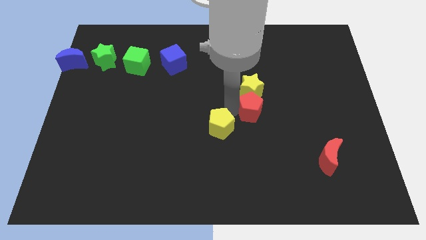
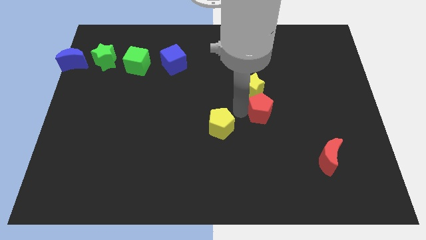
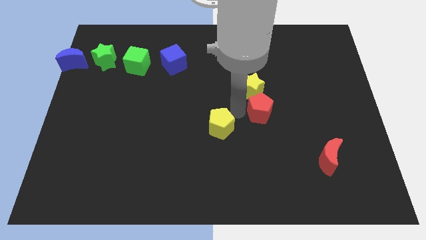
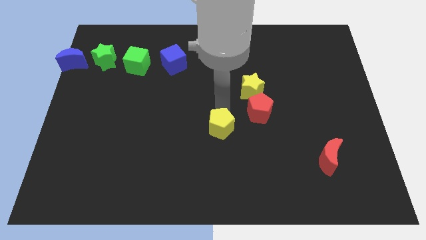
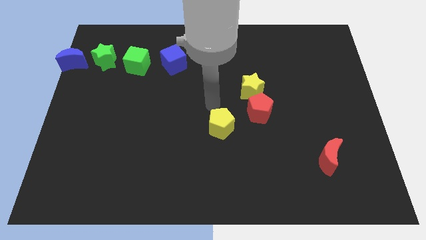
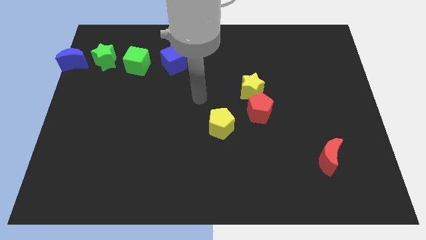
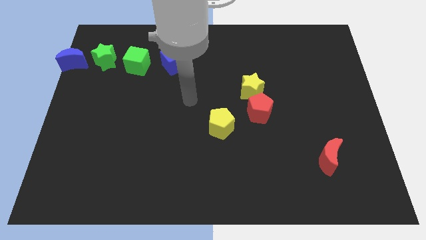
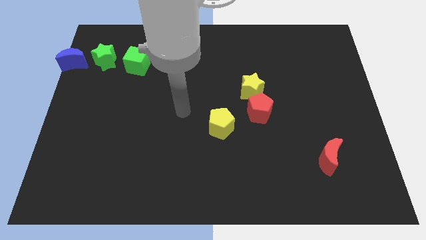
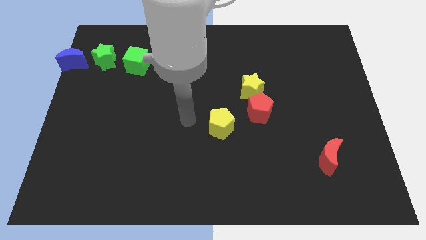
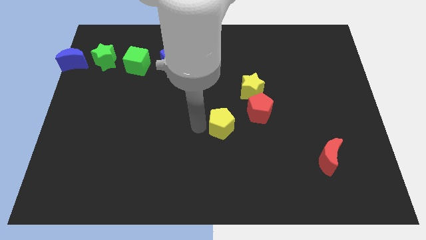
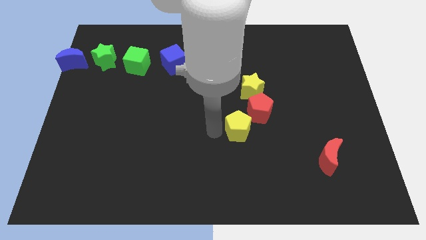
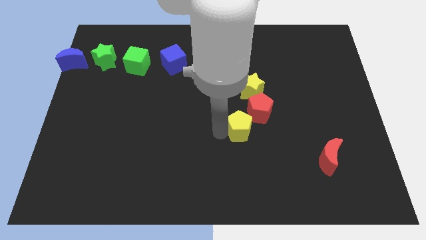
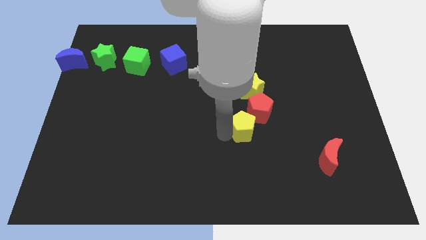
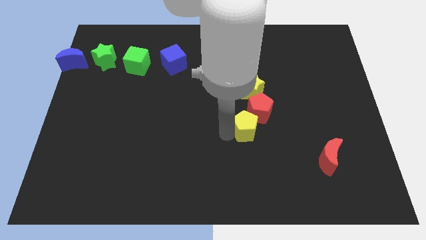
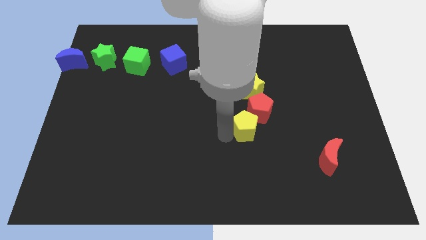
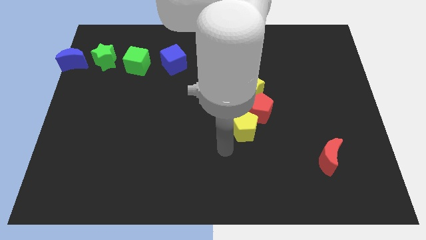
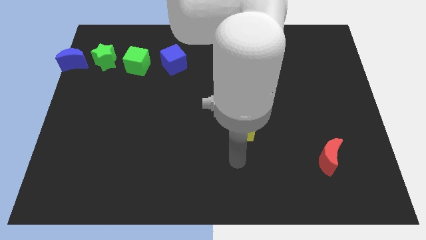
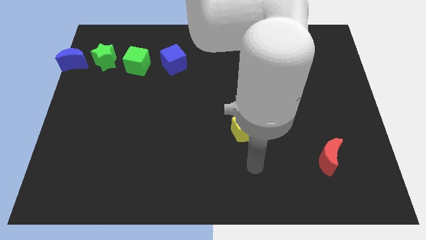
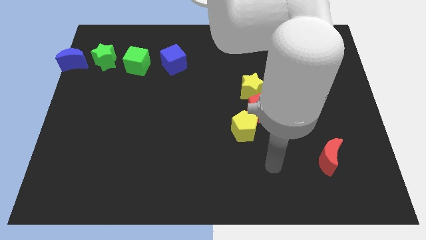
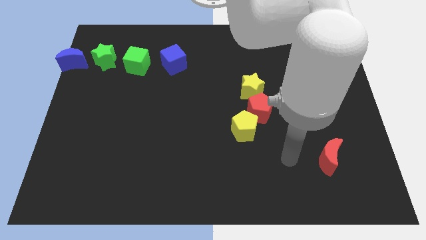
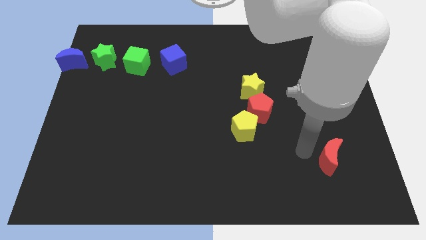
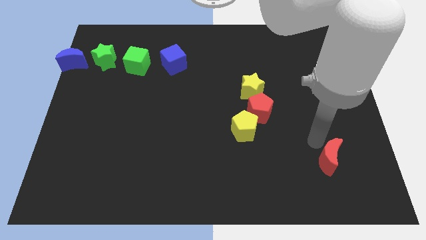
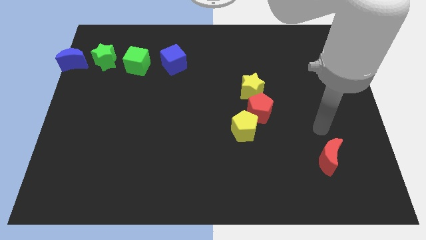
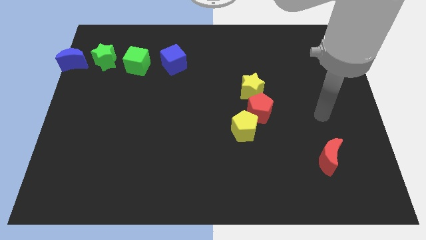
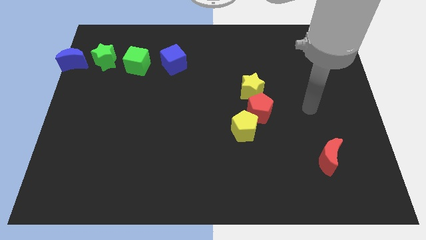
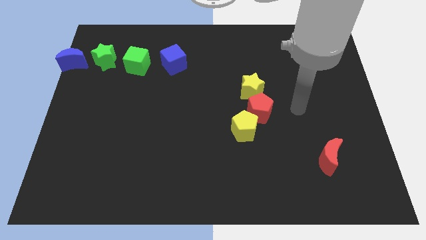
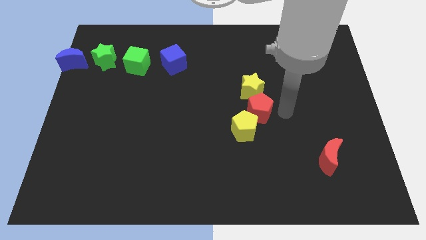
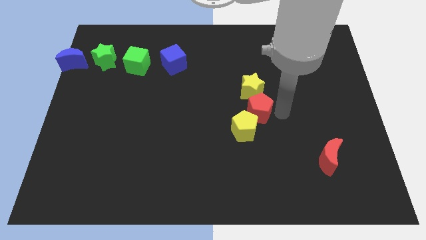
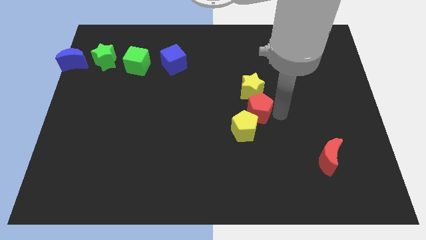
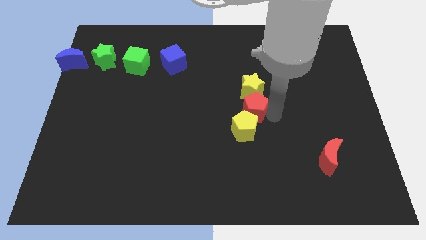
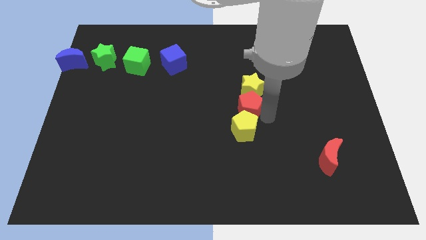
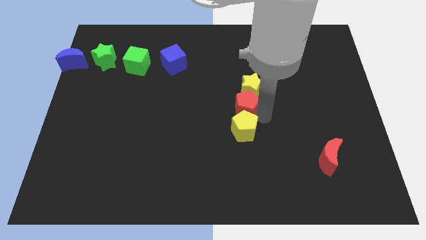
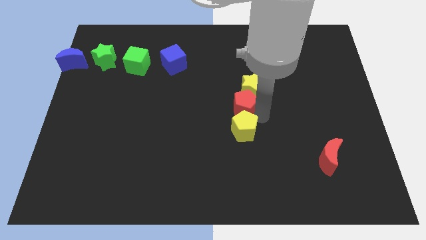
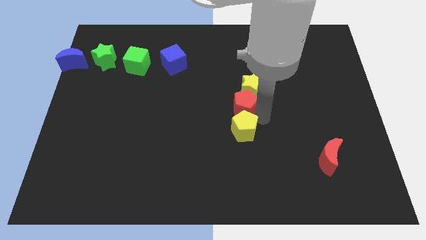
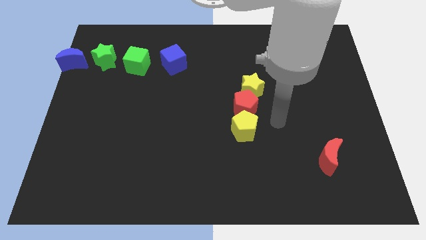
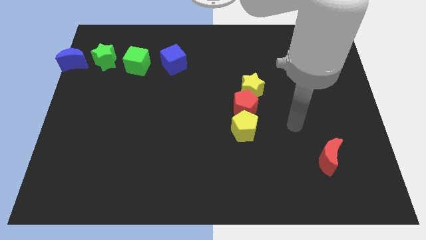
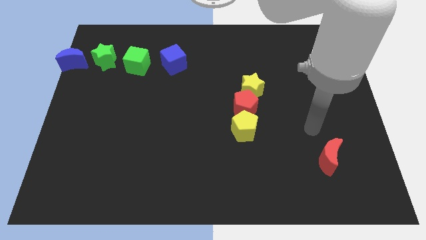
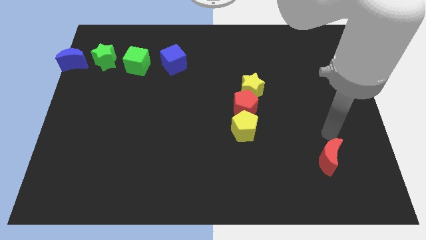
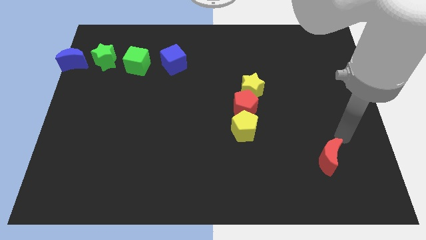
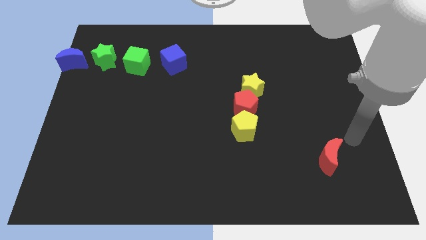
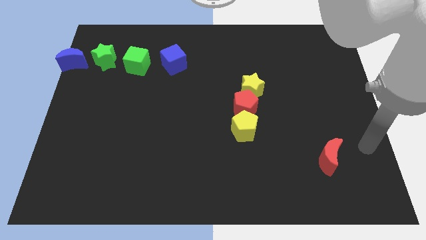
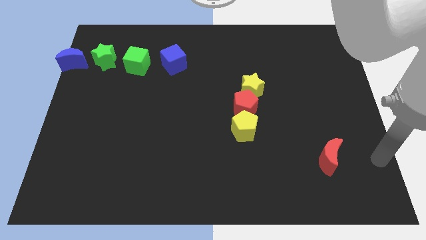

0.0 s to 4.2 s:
place the red petagon between the yellow star and yellow pentagon

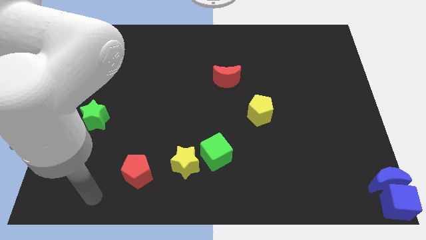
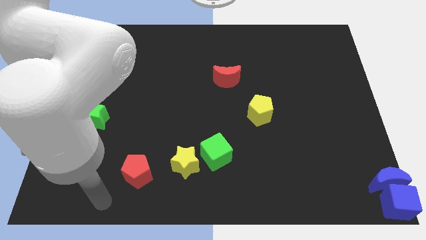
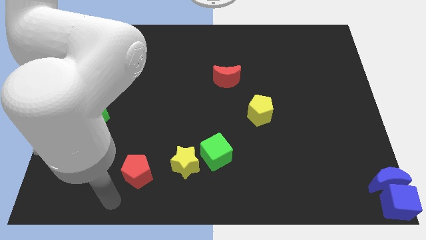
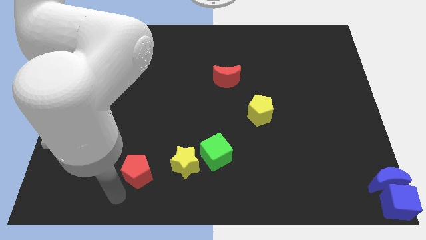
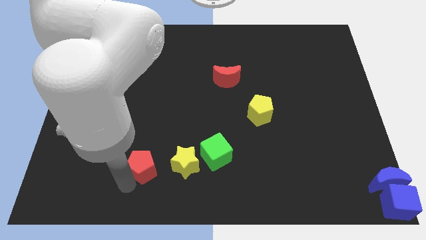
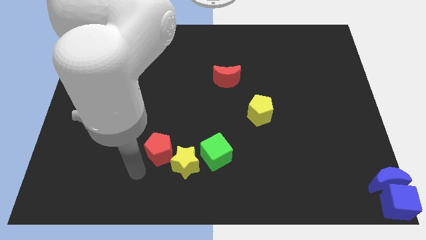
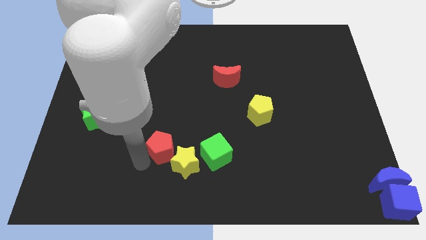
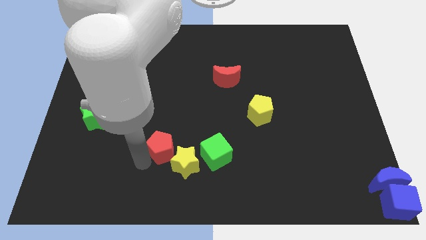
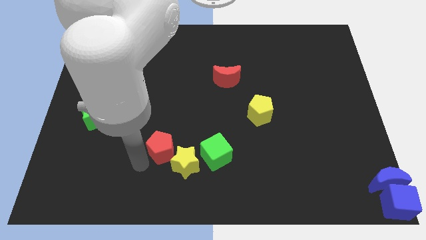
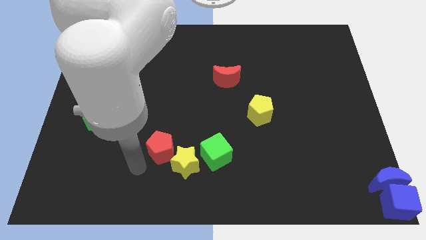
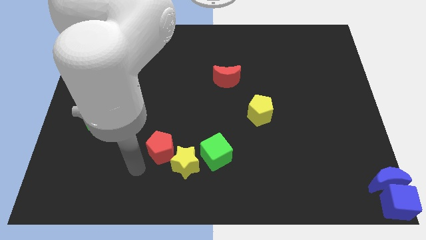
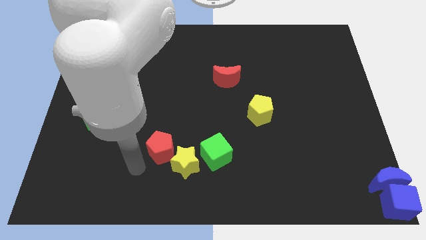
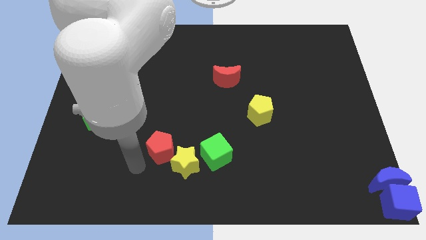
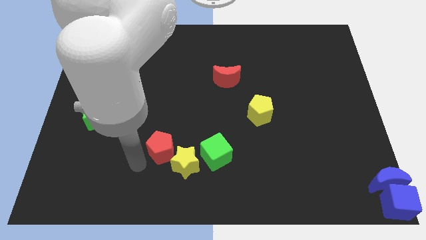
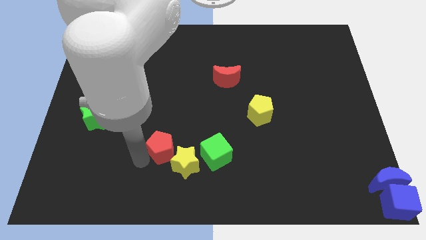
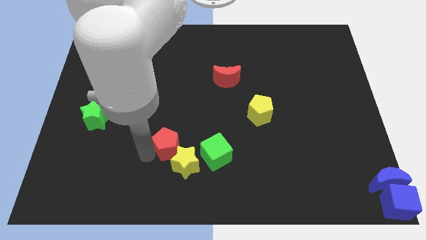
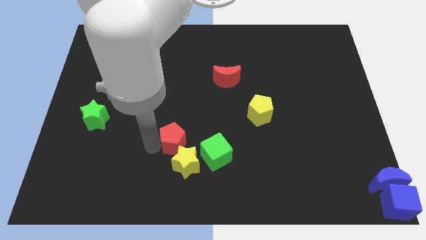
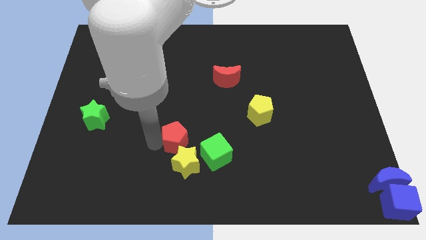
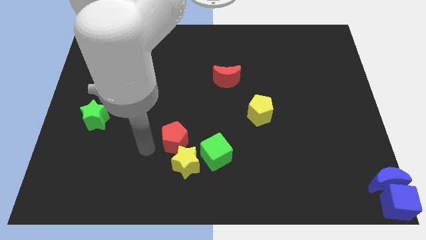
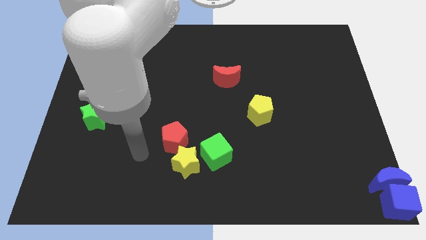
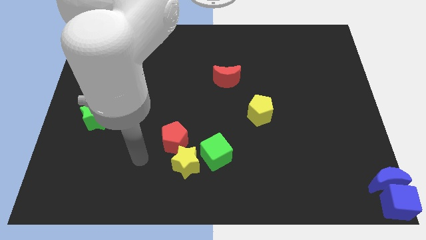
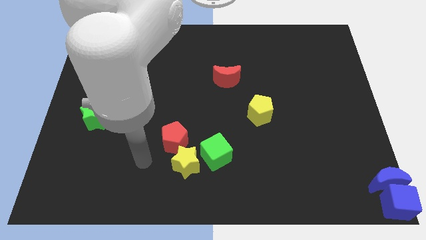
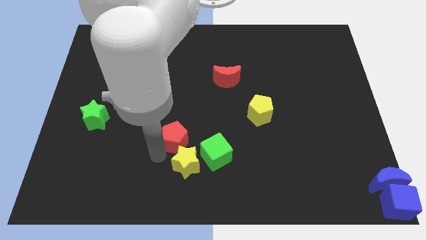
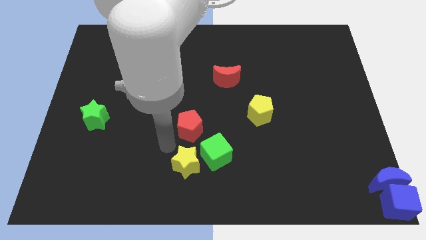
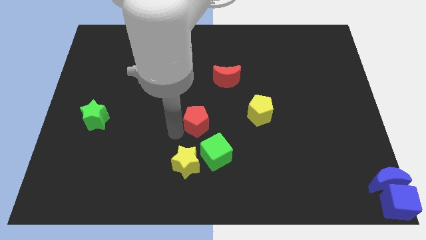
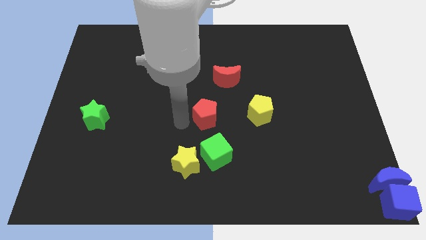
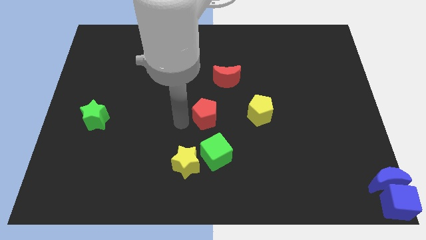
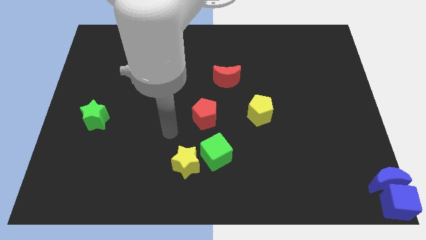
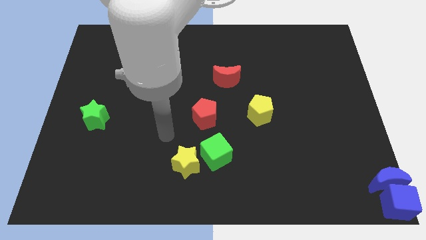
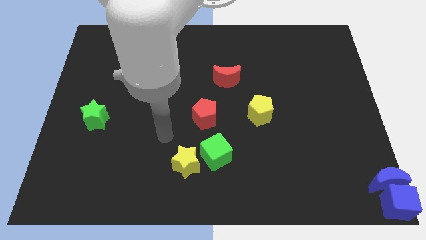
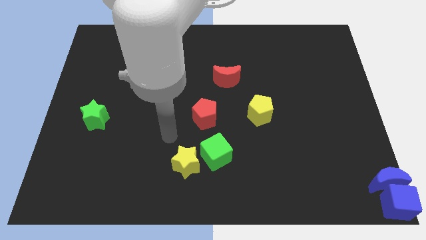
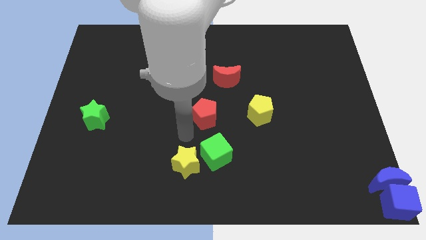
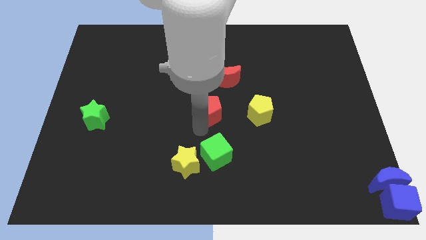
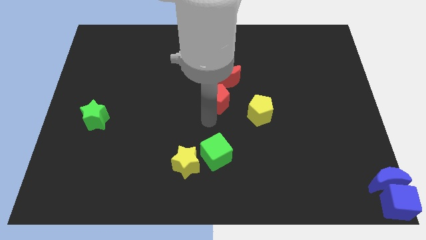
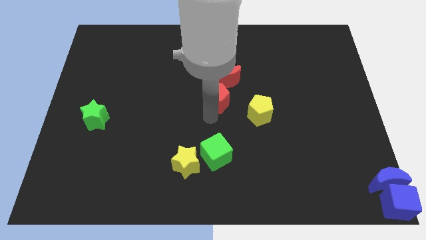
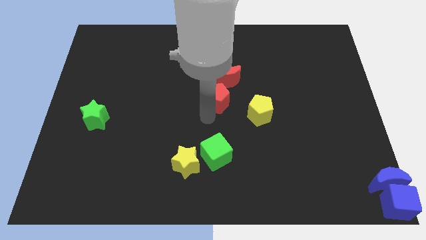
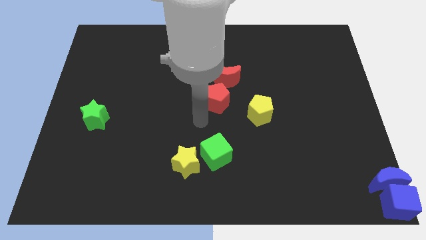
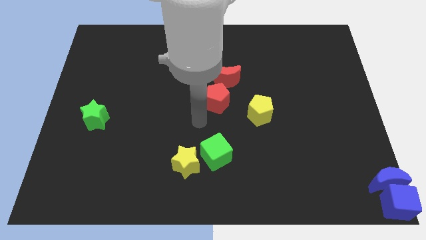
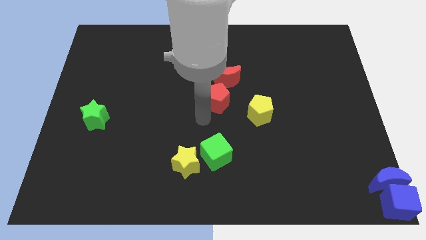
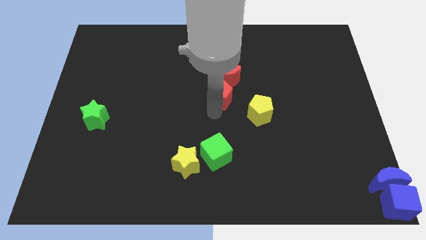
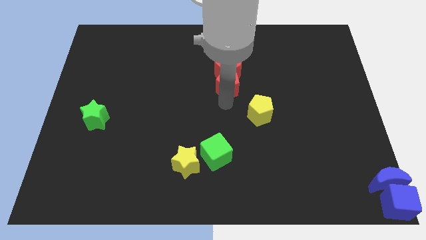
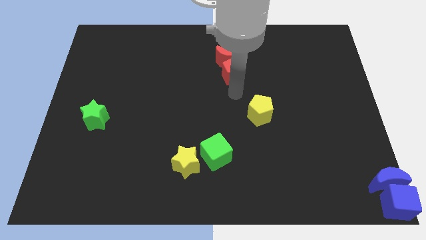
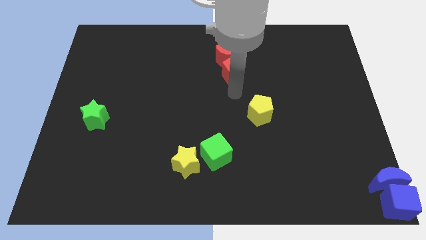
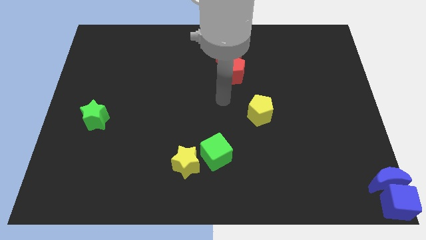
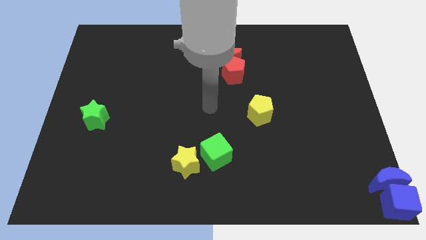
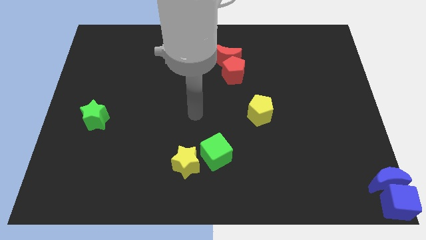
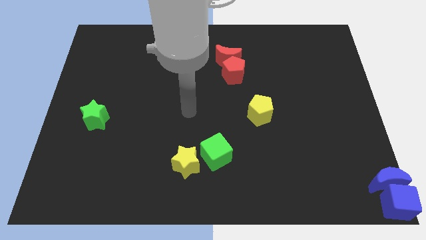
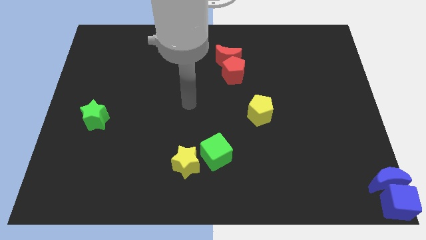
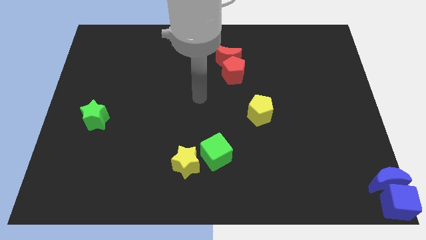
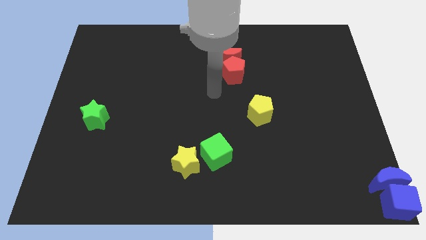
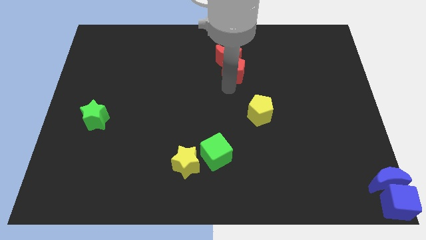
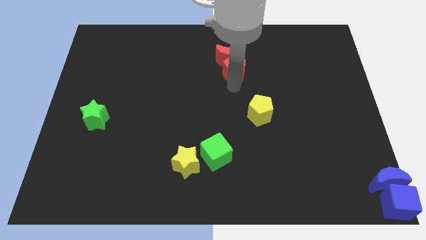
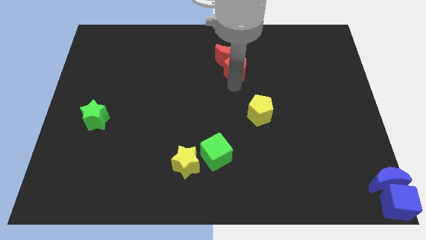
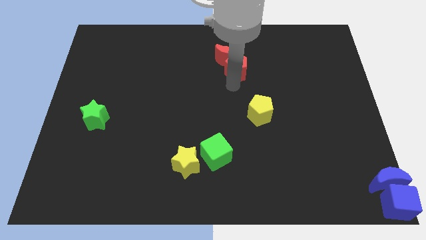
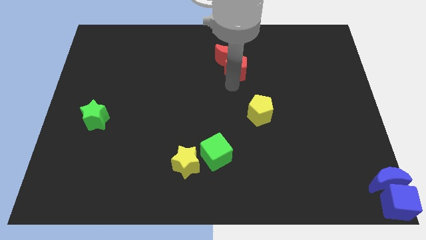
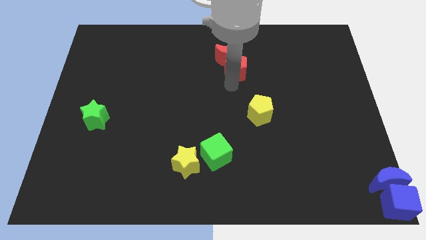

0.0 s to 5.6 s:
push the red pentagon below the red crescent
